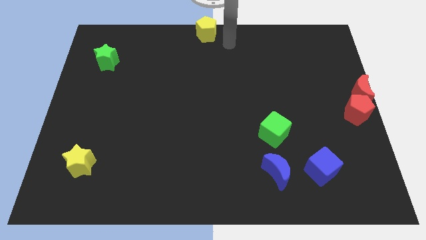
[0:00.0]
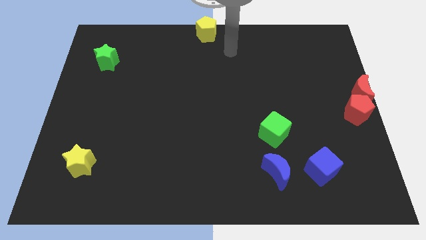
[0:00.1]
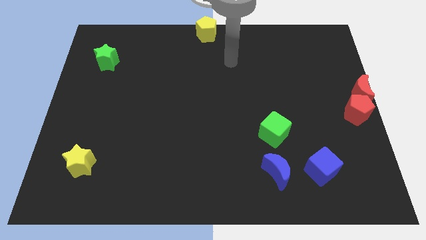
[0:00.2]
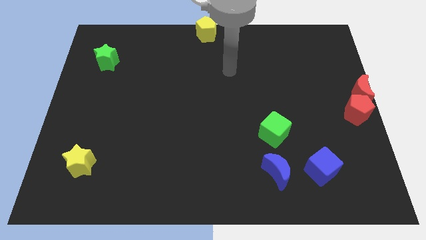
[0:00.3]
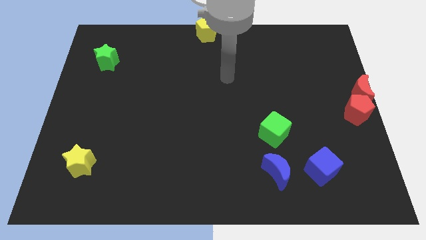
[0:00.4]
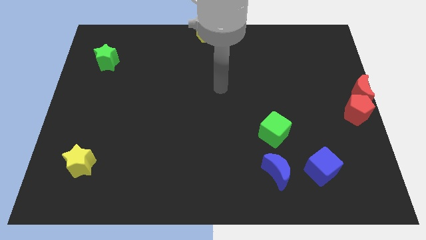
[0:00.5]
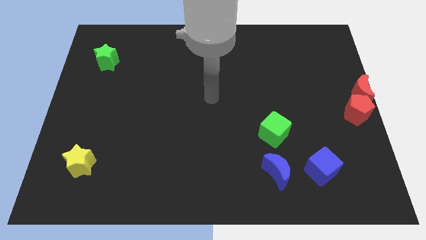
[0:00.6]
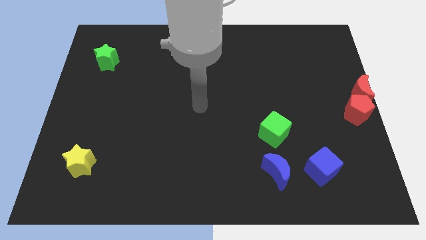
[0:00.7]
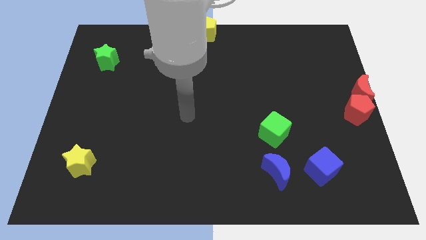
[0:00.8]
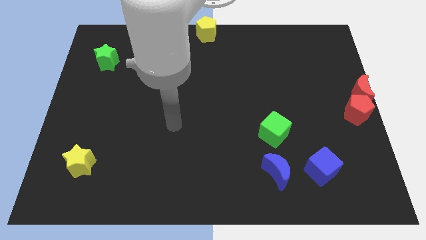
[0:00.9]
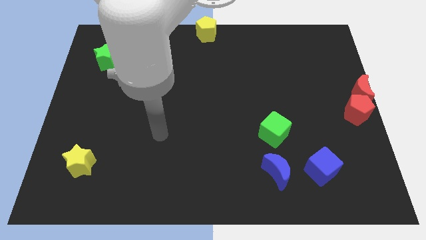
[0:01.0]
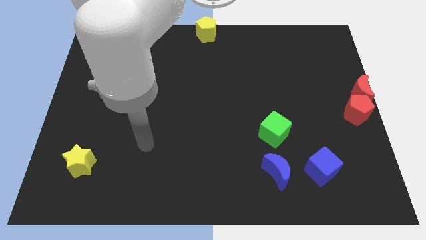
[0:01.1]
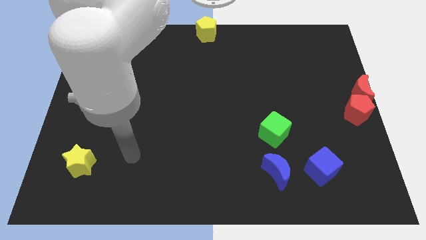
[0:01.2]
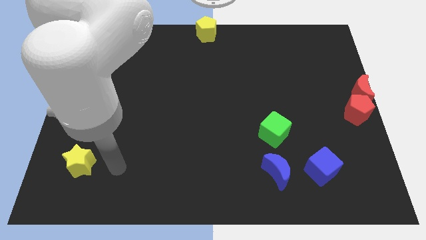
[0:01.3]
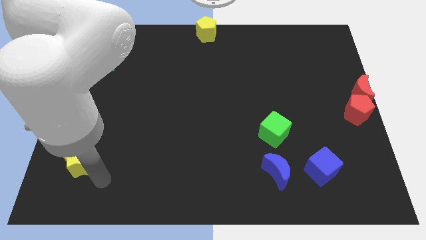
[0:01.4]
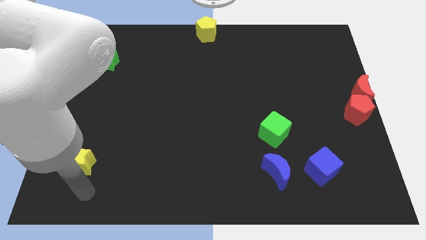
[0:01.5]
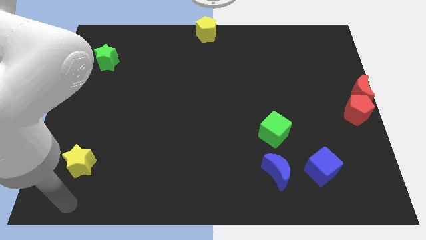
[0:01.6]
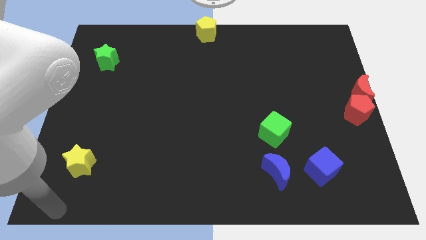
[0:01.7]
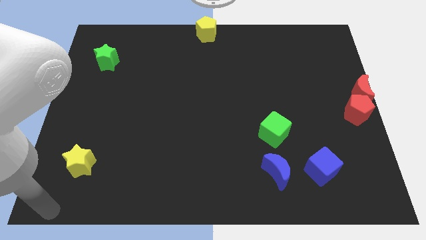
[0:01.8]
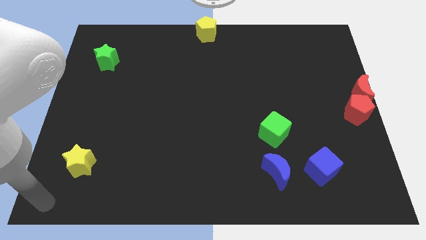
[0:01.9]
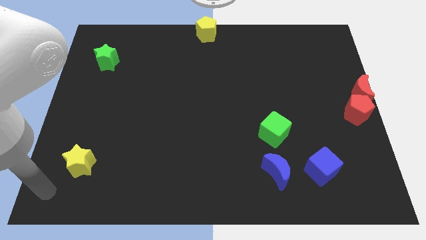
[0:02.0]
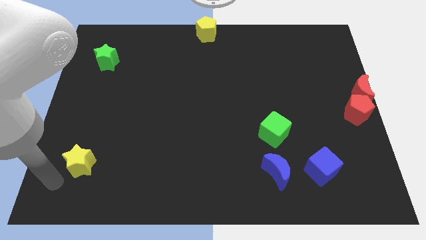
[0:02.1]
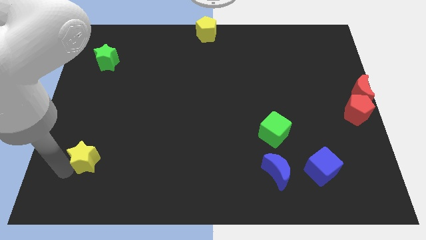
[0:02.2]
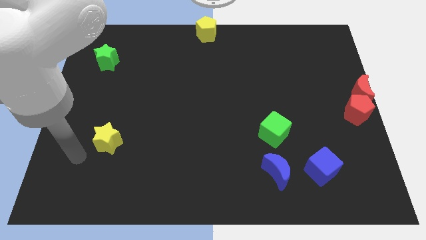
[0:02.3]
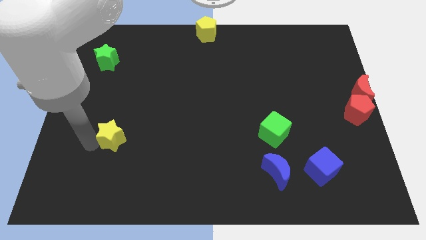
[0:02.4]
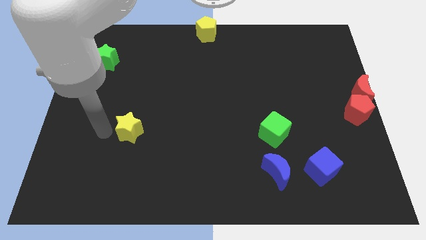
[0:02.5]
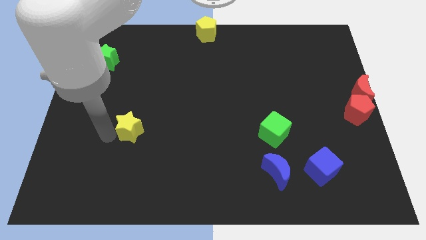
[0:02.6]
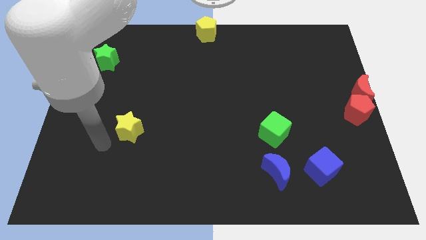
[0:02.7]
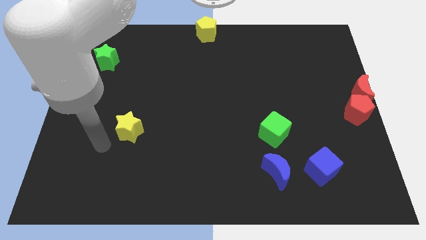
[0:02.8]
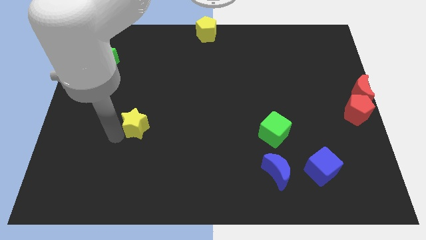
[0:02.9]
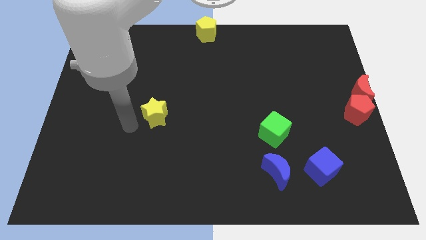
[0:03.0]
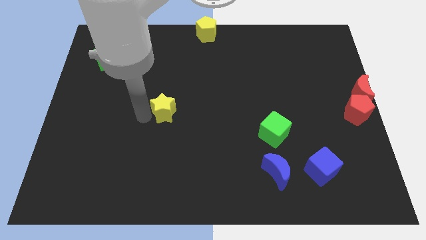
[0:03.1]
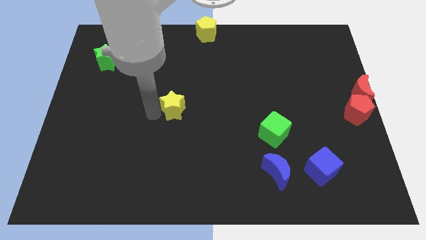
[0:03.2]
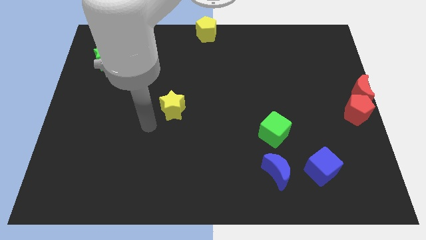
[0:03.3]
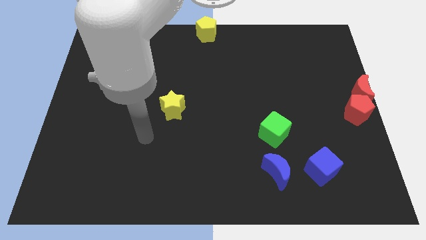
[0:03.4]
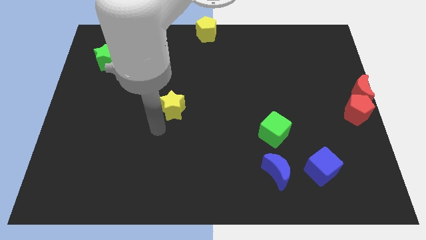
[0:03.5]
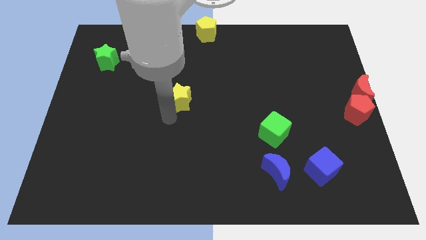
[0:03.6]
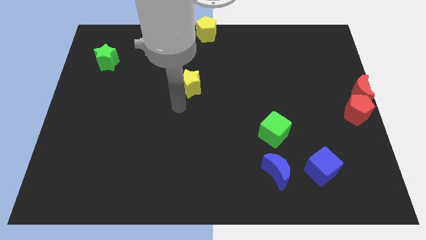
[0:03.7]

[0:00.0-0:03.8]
place the yellow star between the green blocks

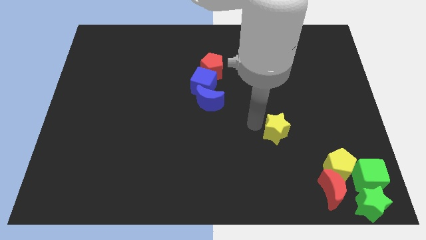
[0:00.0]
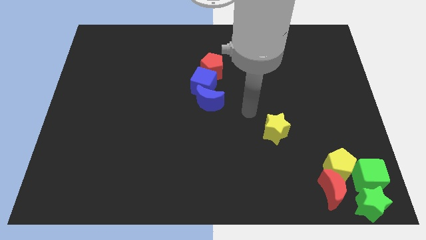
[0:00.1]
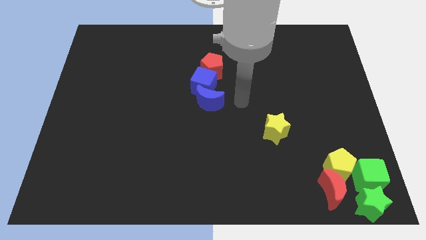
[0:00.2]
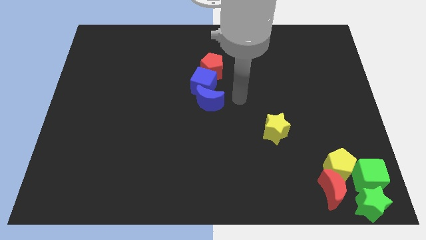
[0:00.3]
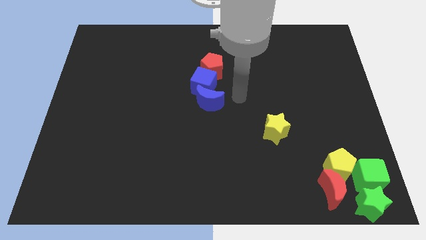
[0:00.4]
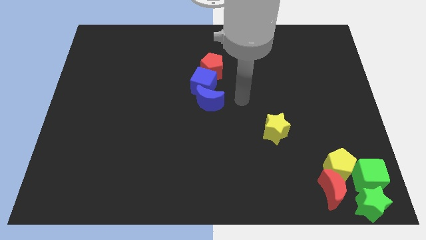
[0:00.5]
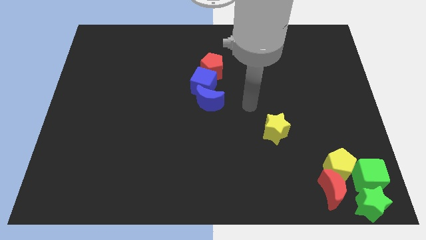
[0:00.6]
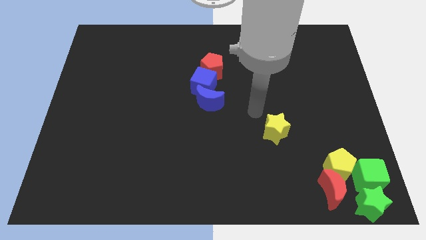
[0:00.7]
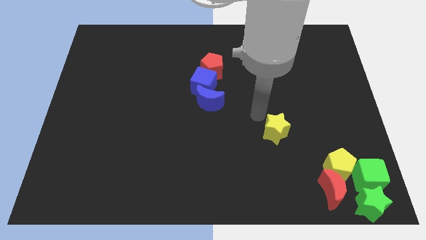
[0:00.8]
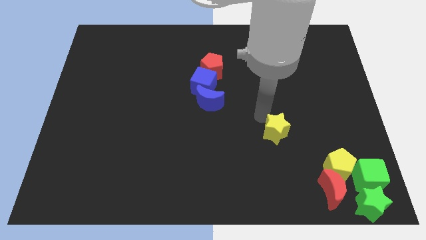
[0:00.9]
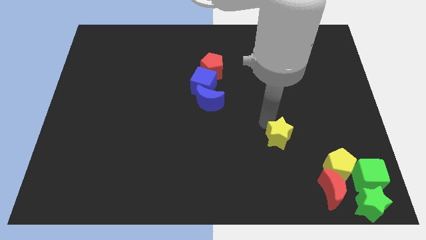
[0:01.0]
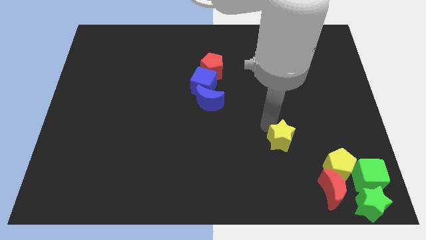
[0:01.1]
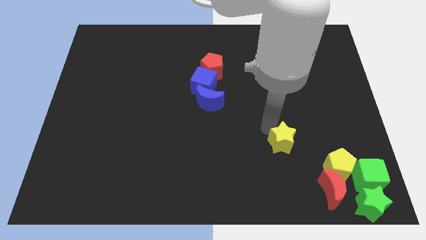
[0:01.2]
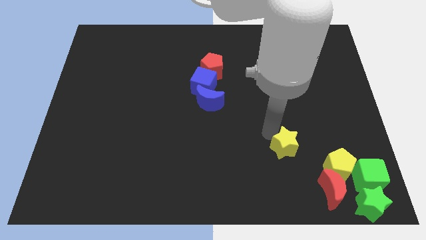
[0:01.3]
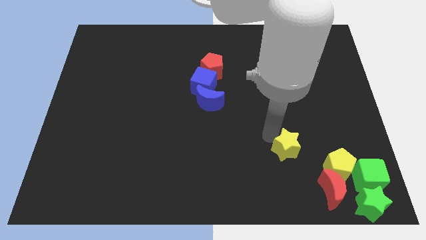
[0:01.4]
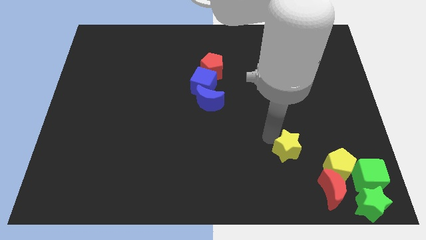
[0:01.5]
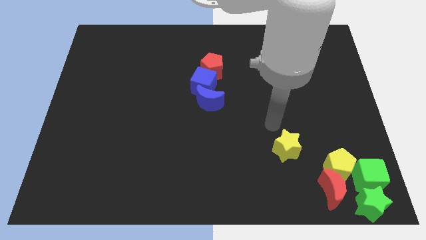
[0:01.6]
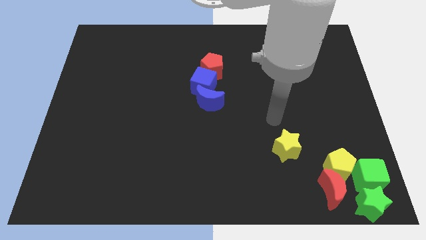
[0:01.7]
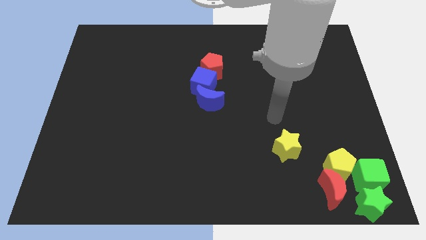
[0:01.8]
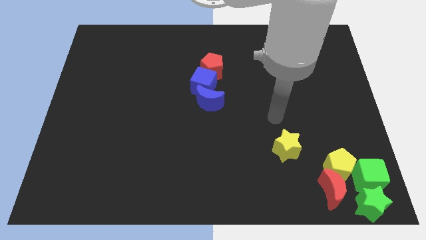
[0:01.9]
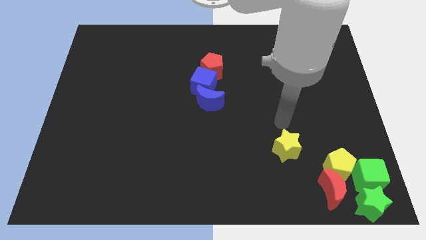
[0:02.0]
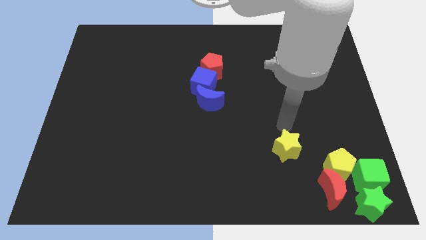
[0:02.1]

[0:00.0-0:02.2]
push the yellow star towards the bottom side of the board

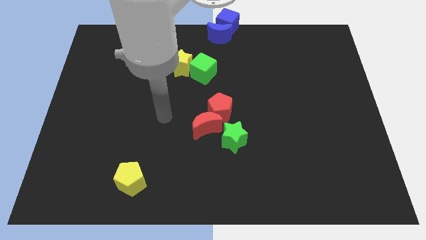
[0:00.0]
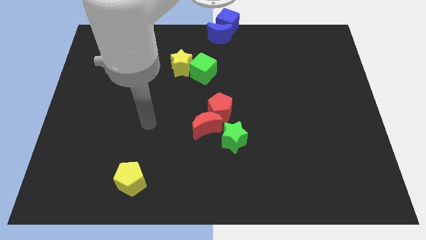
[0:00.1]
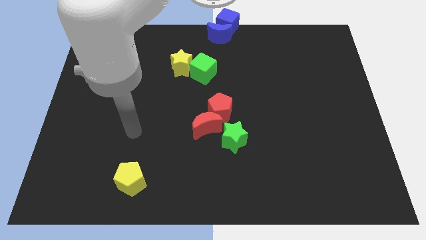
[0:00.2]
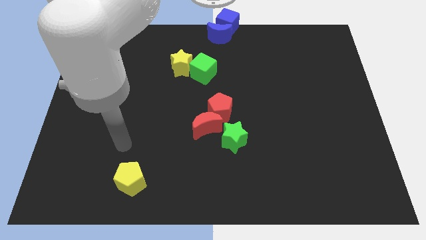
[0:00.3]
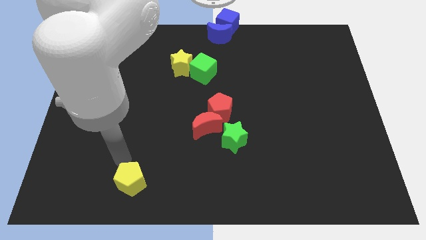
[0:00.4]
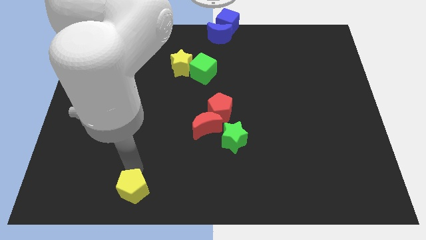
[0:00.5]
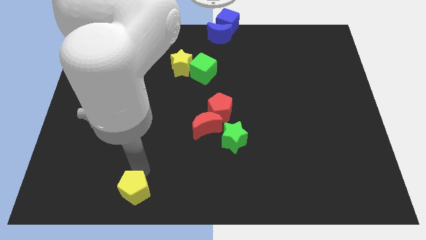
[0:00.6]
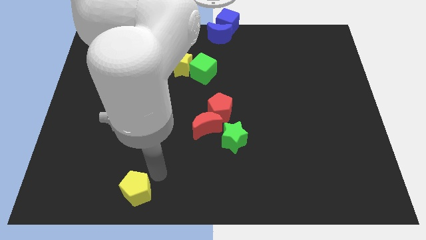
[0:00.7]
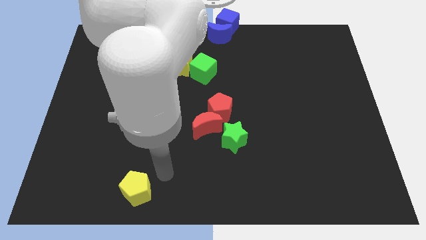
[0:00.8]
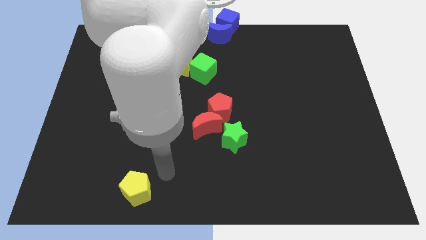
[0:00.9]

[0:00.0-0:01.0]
slightly push the yellow pentagon downward

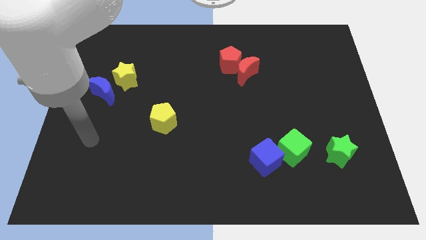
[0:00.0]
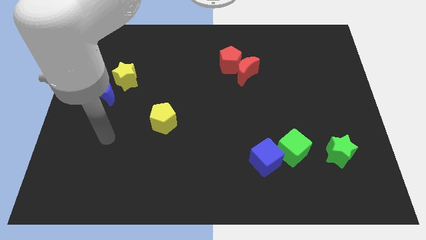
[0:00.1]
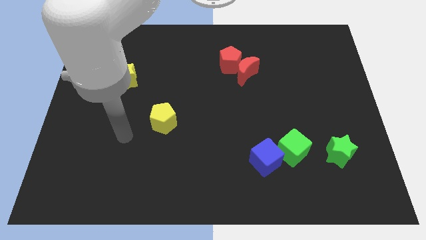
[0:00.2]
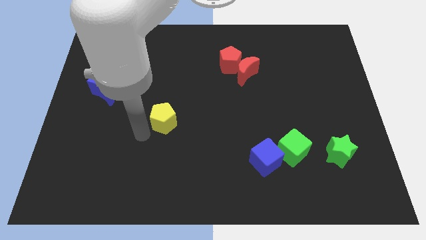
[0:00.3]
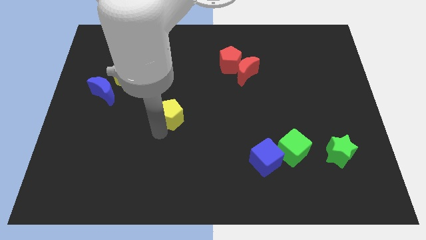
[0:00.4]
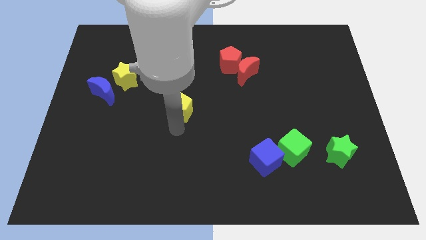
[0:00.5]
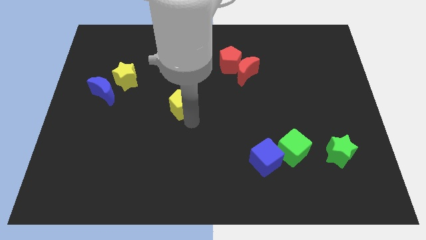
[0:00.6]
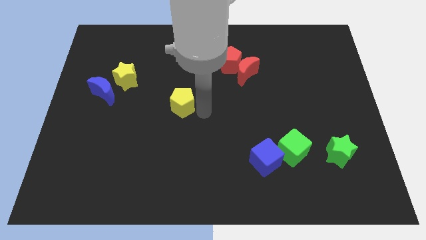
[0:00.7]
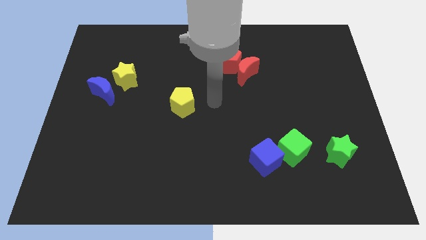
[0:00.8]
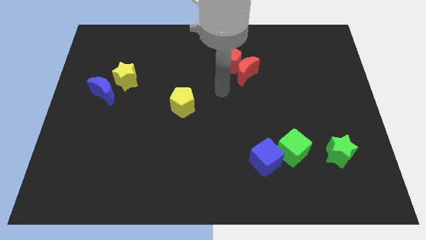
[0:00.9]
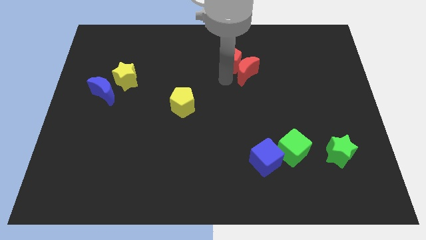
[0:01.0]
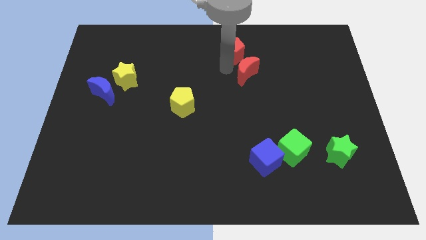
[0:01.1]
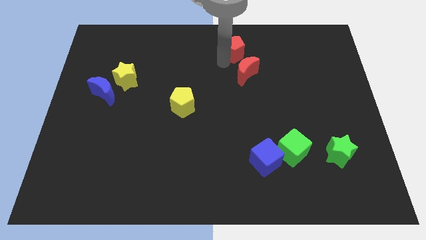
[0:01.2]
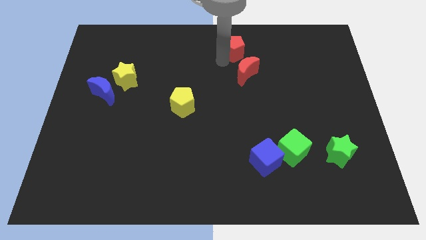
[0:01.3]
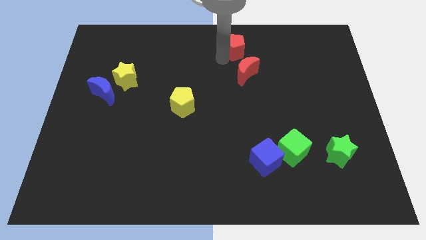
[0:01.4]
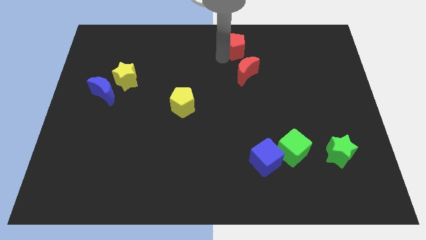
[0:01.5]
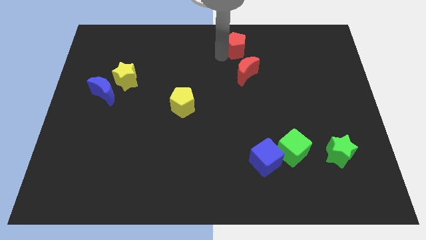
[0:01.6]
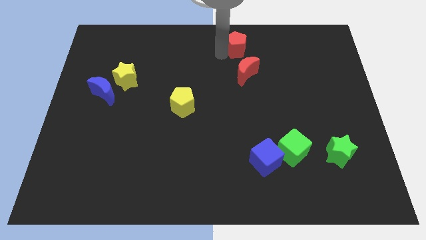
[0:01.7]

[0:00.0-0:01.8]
touch both the pentagon shaped objects

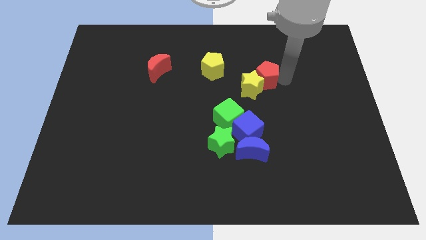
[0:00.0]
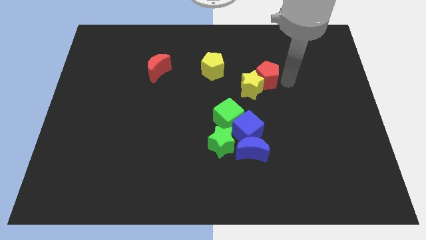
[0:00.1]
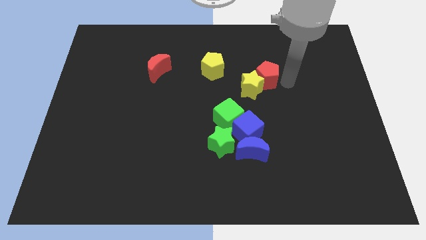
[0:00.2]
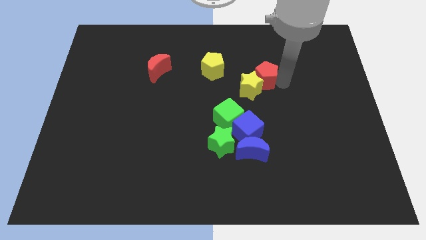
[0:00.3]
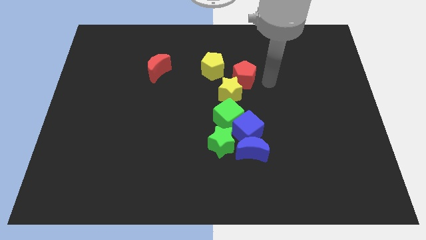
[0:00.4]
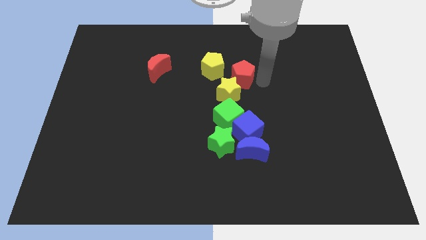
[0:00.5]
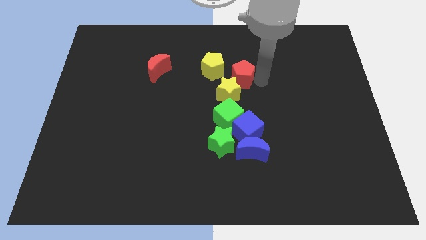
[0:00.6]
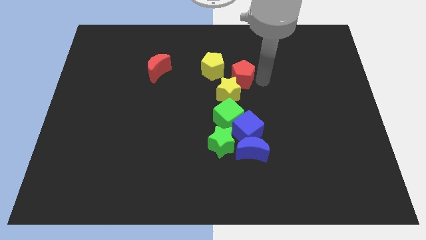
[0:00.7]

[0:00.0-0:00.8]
push the red pentagon into yellow star
